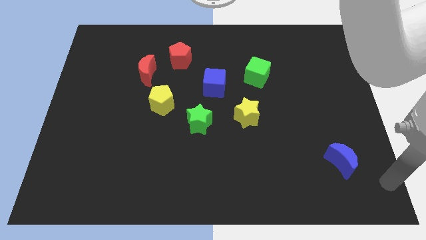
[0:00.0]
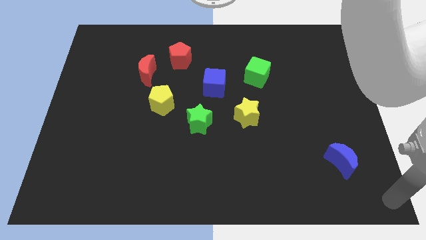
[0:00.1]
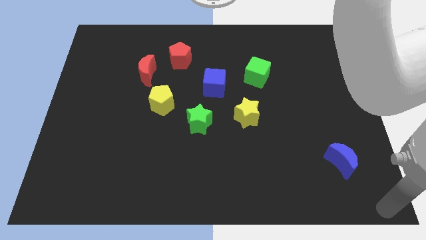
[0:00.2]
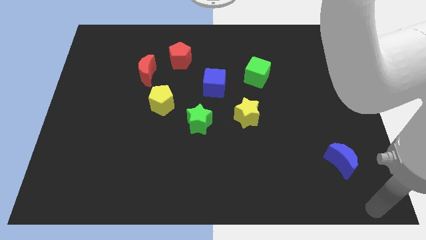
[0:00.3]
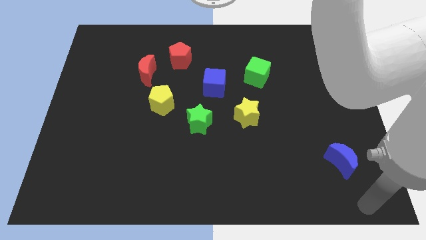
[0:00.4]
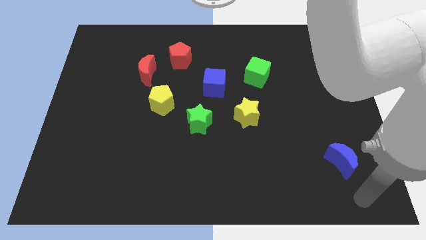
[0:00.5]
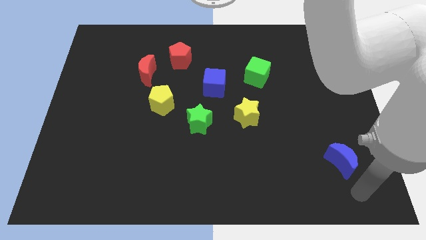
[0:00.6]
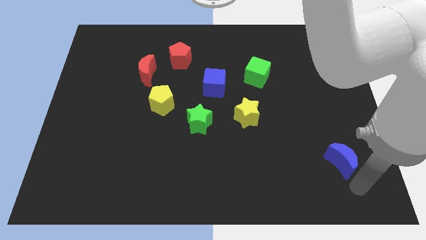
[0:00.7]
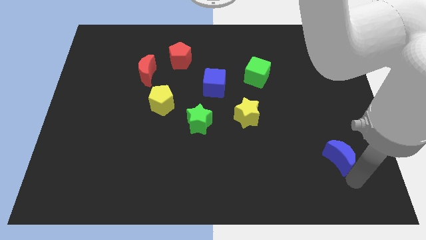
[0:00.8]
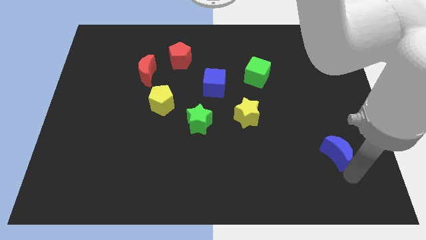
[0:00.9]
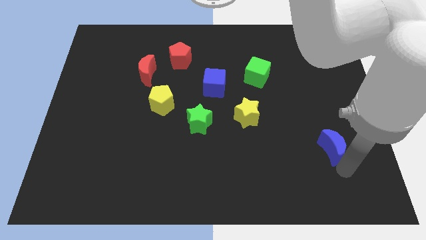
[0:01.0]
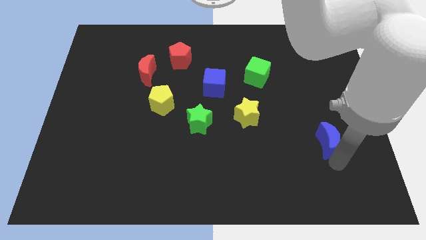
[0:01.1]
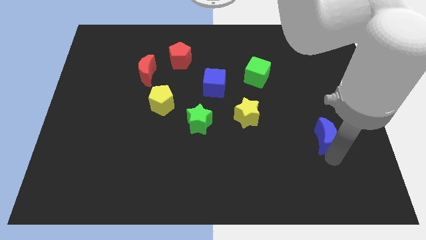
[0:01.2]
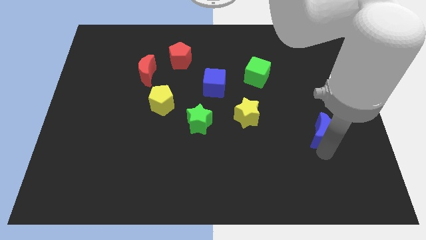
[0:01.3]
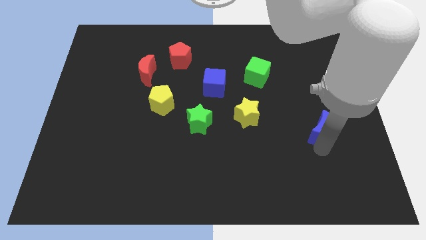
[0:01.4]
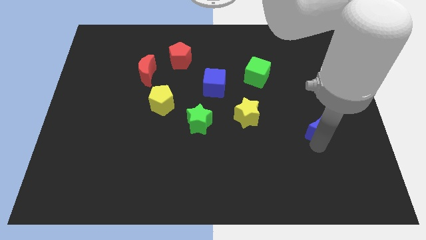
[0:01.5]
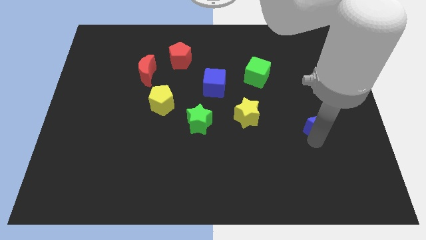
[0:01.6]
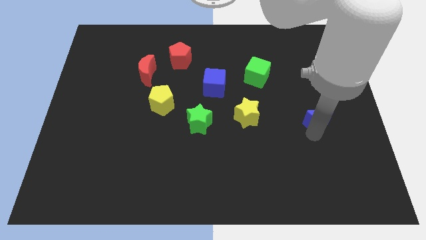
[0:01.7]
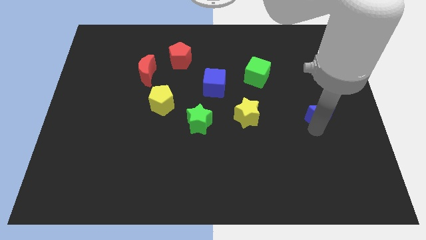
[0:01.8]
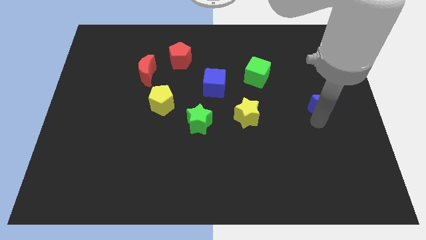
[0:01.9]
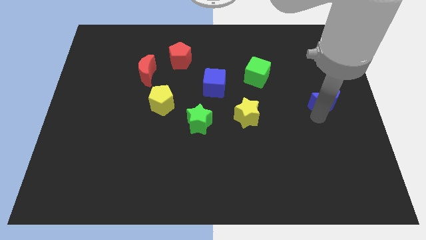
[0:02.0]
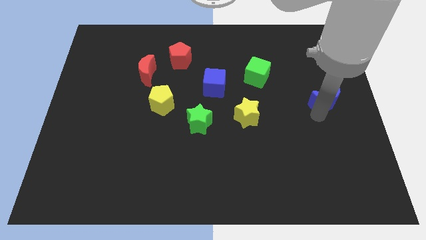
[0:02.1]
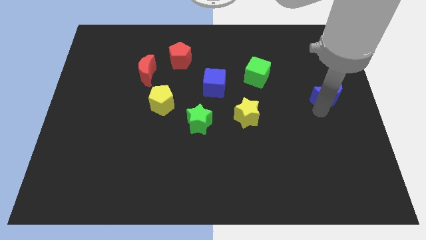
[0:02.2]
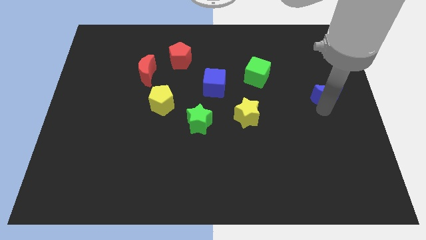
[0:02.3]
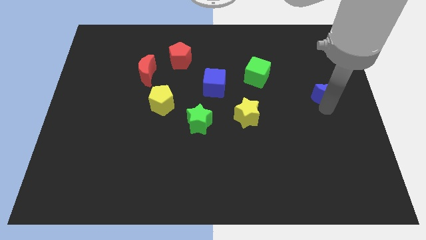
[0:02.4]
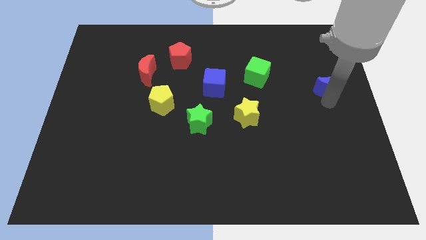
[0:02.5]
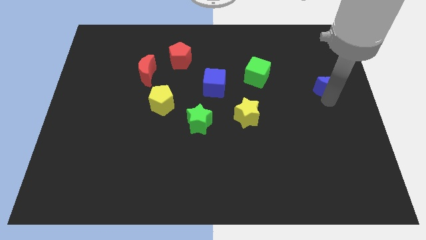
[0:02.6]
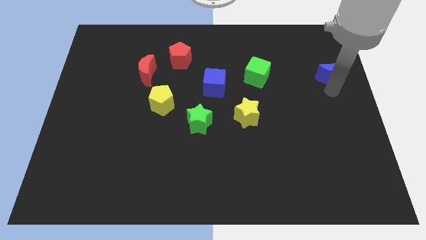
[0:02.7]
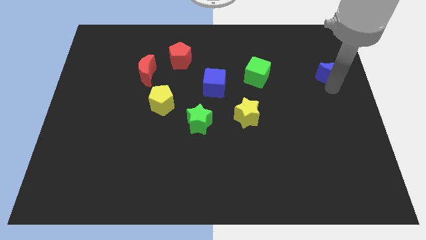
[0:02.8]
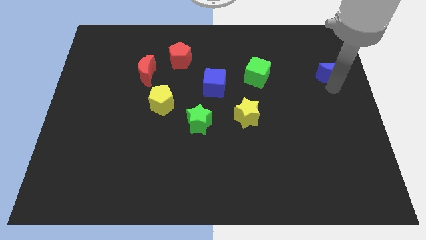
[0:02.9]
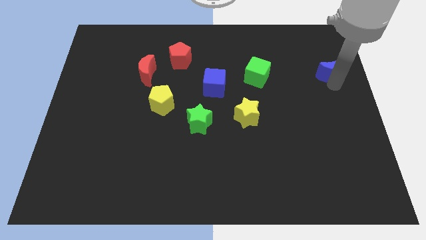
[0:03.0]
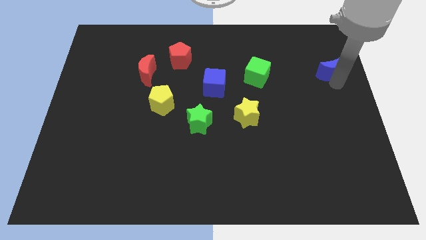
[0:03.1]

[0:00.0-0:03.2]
move the blue crescent to the right of the green cube

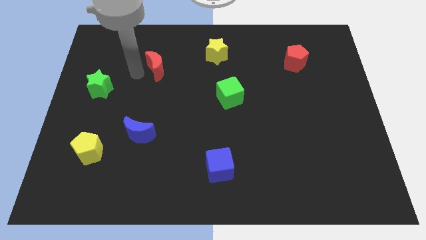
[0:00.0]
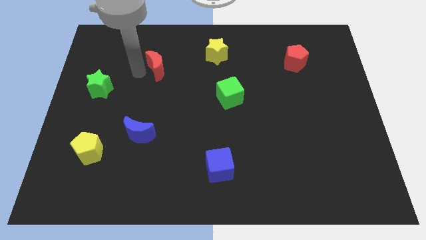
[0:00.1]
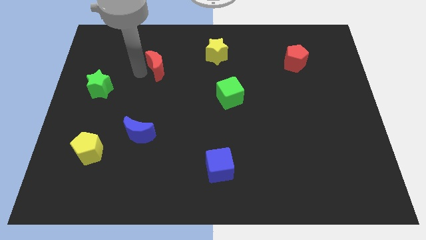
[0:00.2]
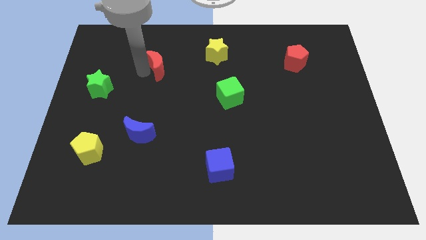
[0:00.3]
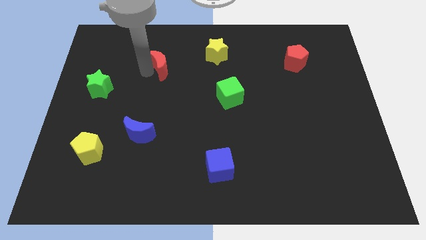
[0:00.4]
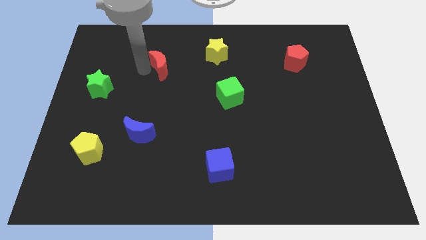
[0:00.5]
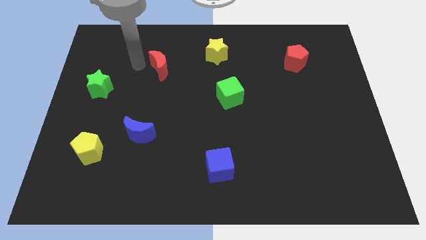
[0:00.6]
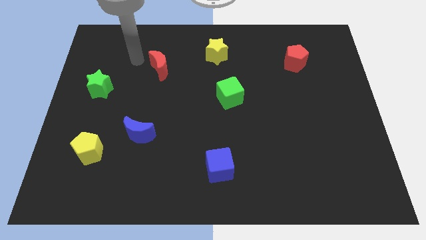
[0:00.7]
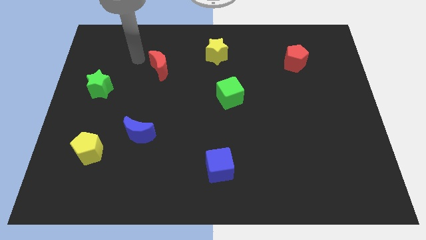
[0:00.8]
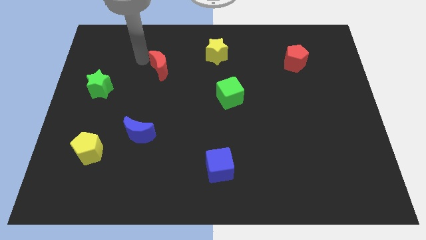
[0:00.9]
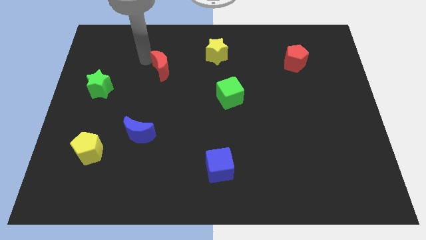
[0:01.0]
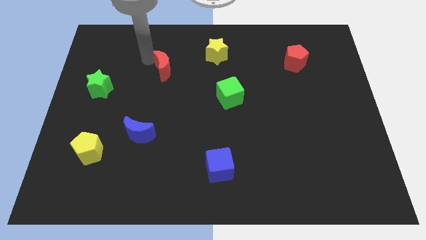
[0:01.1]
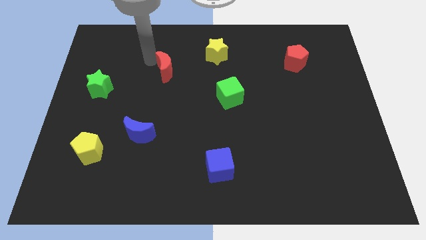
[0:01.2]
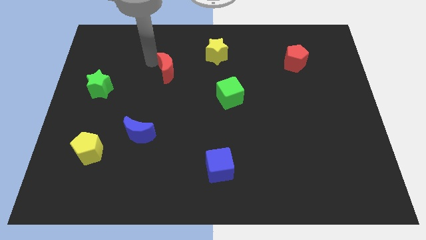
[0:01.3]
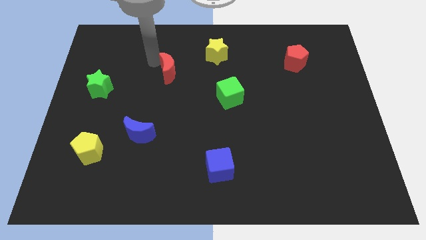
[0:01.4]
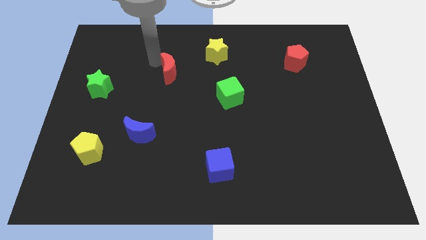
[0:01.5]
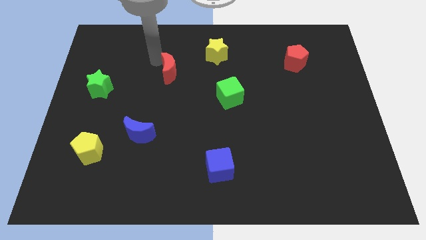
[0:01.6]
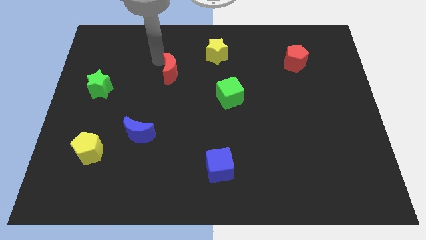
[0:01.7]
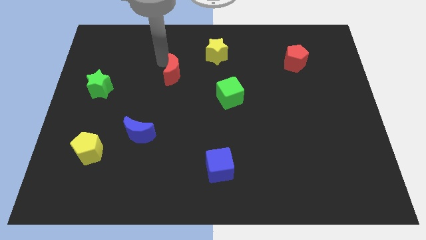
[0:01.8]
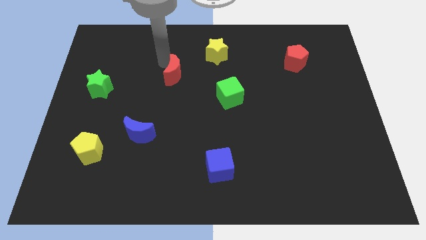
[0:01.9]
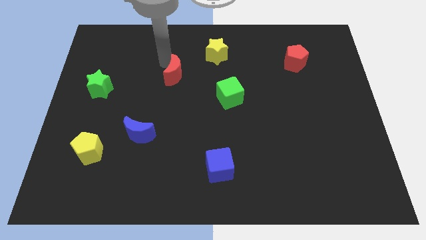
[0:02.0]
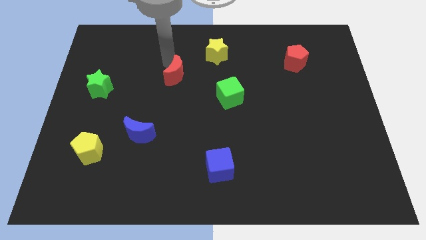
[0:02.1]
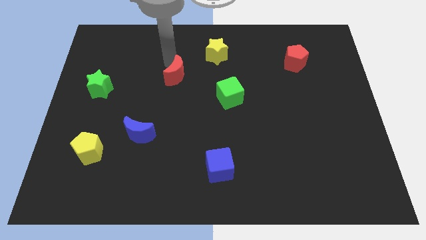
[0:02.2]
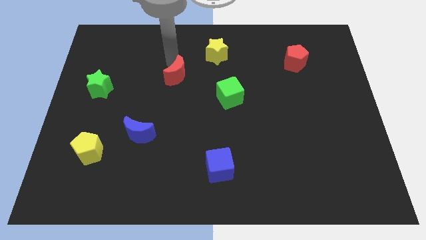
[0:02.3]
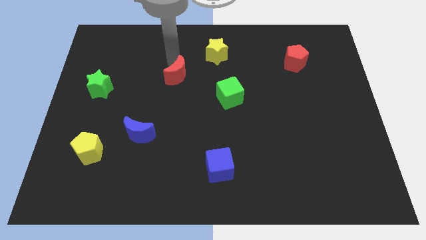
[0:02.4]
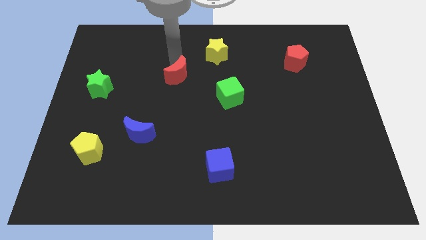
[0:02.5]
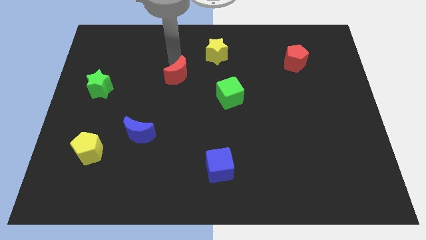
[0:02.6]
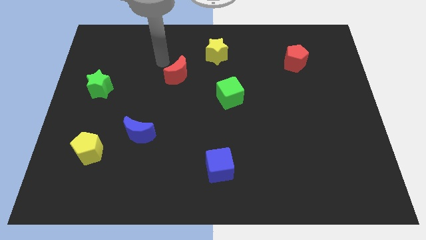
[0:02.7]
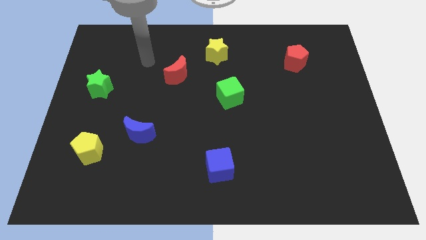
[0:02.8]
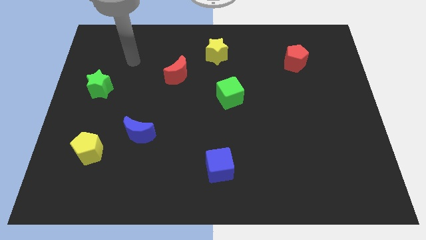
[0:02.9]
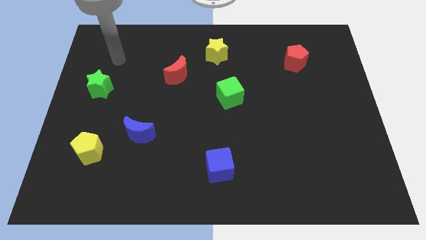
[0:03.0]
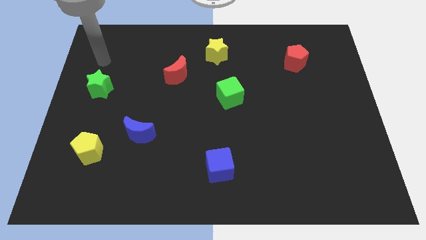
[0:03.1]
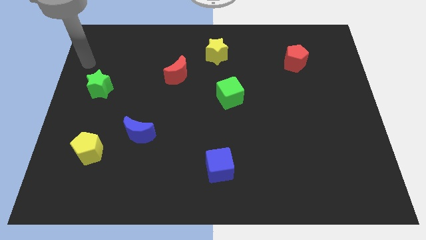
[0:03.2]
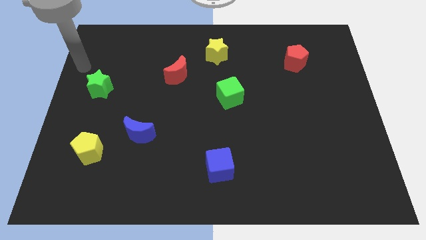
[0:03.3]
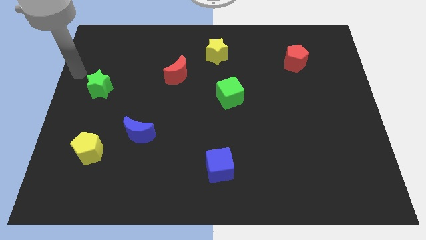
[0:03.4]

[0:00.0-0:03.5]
slide the red crescent to the bottom left side of the yellow star

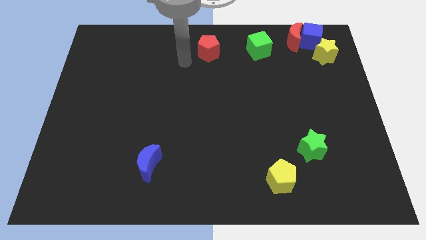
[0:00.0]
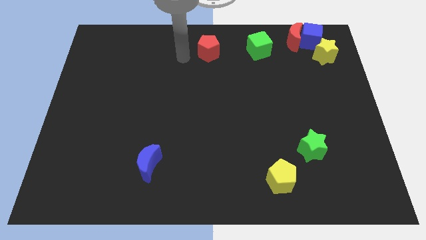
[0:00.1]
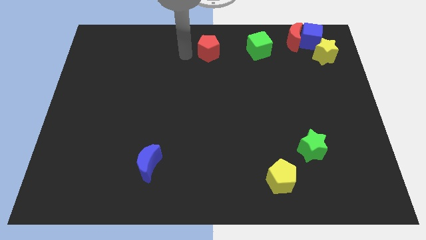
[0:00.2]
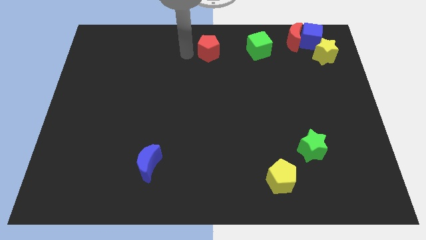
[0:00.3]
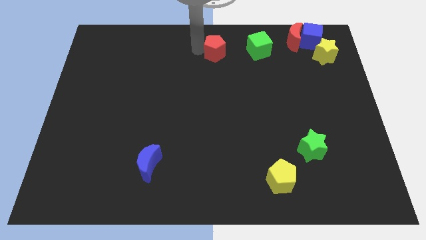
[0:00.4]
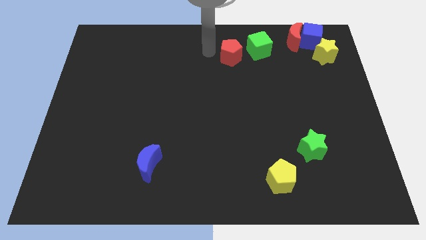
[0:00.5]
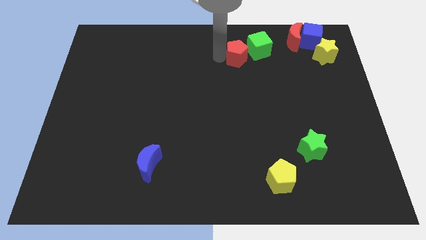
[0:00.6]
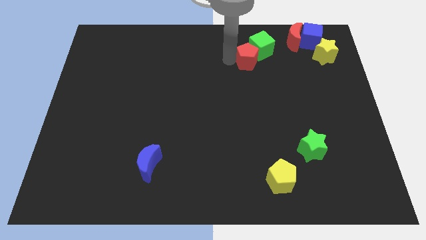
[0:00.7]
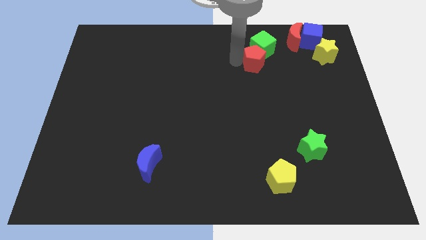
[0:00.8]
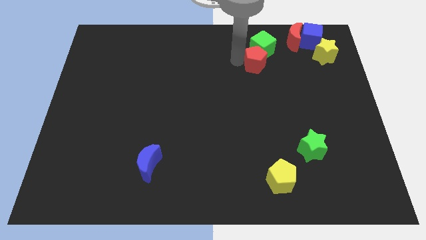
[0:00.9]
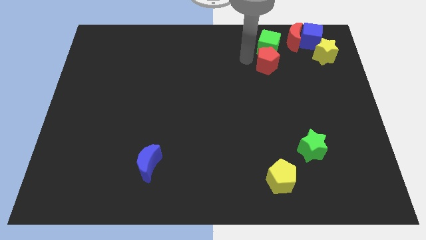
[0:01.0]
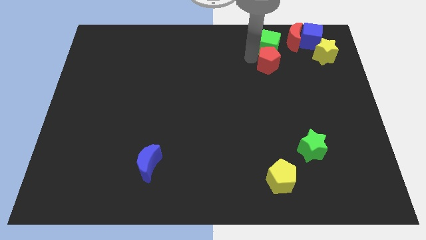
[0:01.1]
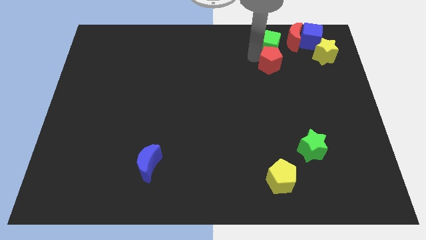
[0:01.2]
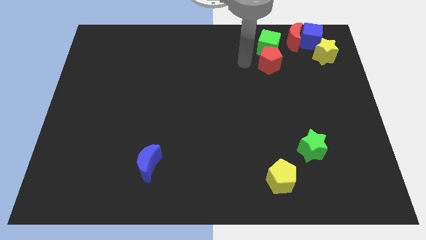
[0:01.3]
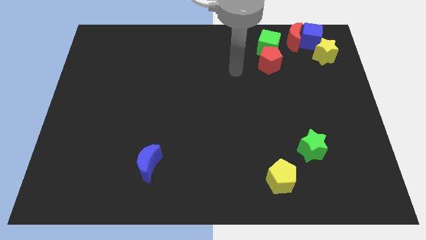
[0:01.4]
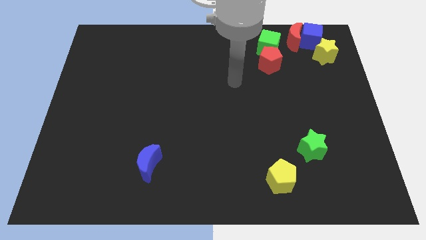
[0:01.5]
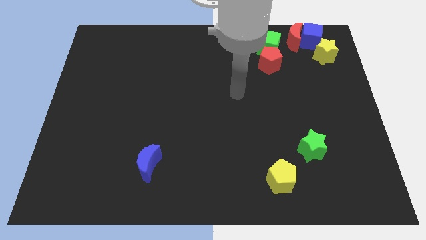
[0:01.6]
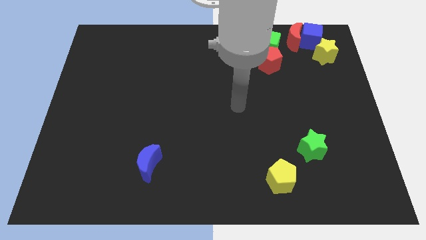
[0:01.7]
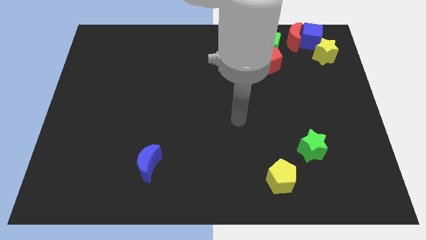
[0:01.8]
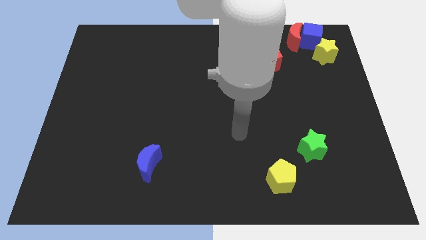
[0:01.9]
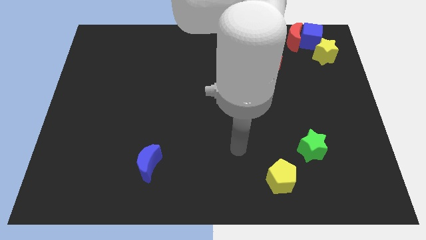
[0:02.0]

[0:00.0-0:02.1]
place the red pentagon vertical to the green cube

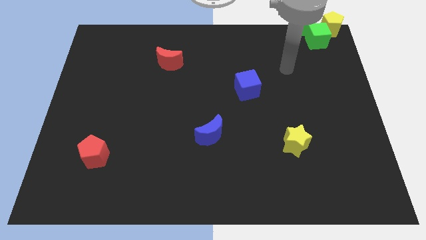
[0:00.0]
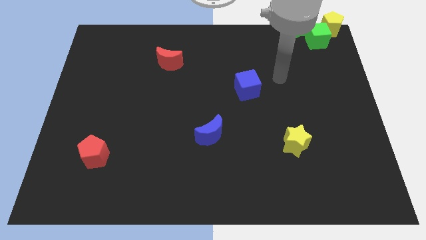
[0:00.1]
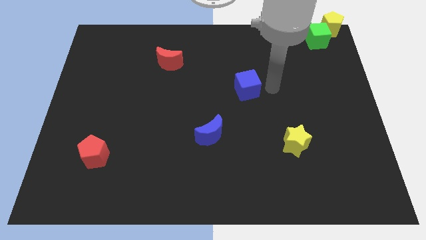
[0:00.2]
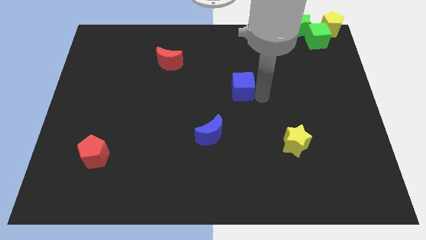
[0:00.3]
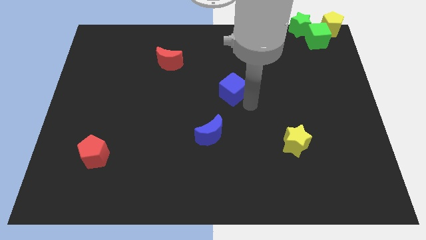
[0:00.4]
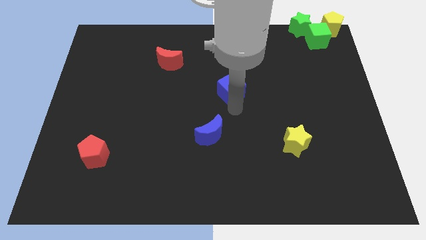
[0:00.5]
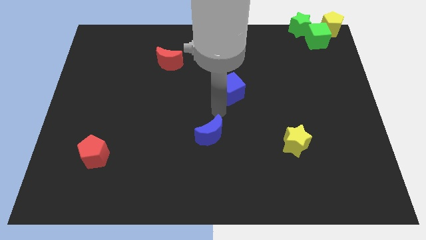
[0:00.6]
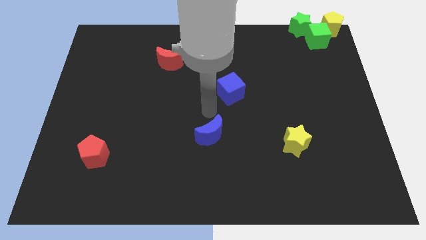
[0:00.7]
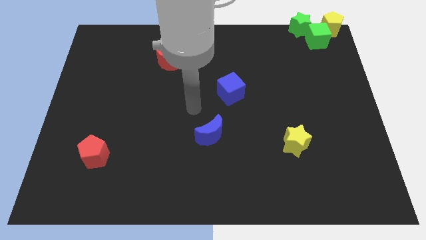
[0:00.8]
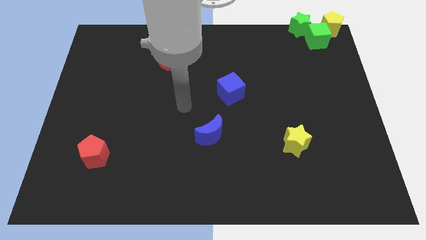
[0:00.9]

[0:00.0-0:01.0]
slightly push the blue cube towards the center of the board
